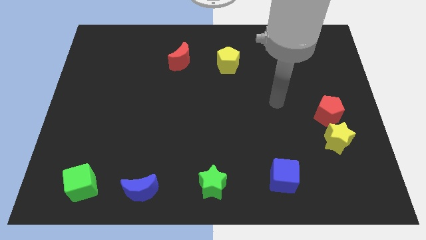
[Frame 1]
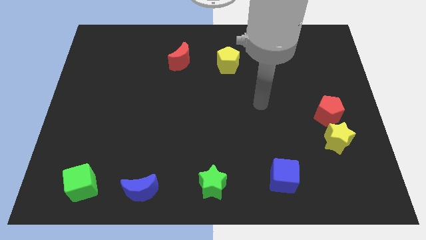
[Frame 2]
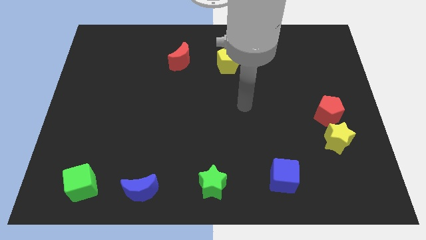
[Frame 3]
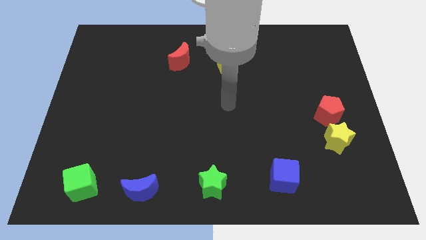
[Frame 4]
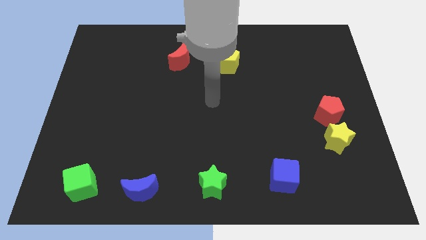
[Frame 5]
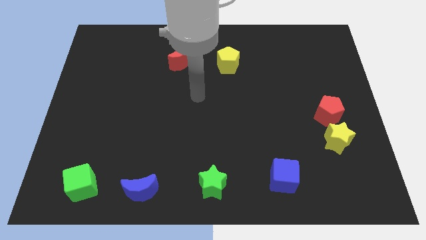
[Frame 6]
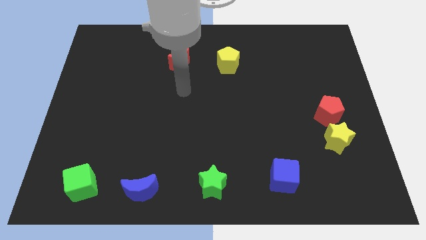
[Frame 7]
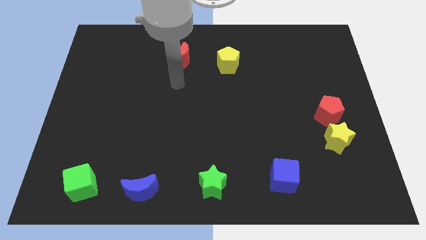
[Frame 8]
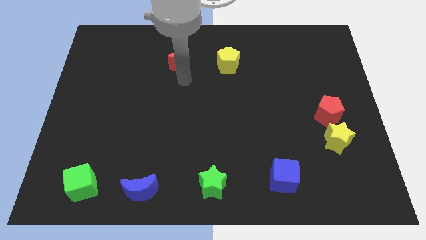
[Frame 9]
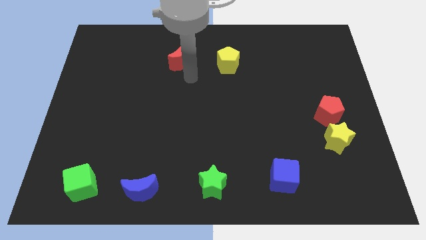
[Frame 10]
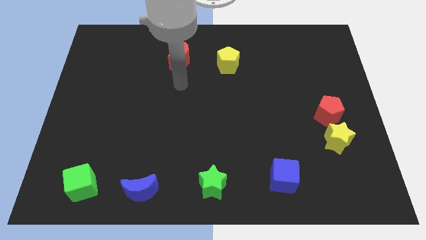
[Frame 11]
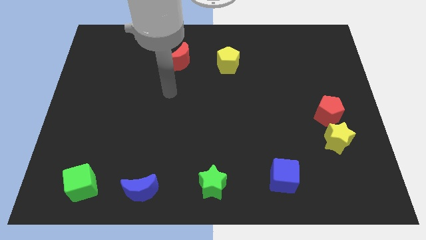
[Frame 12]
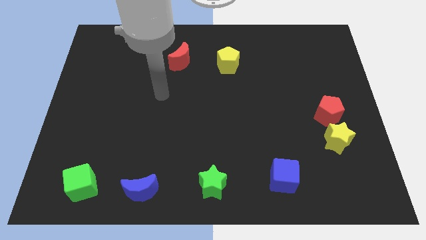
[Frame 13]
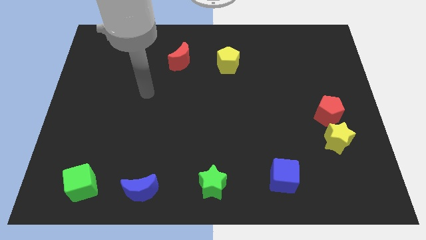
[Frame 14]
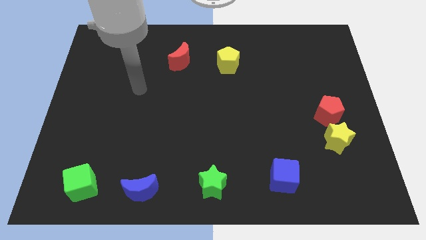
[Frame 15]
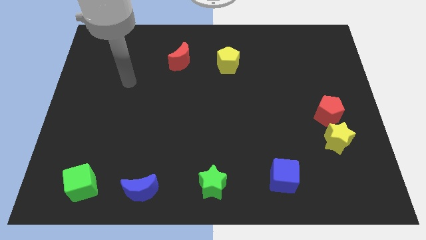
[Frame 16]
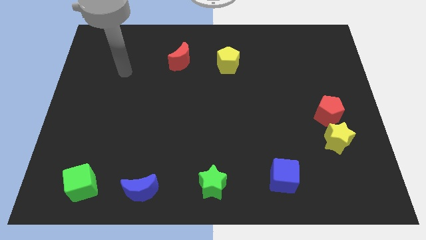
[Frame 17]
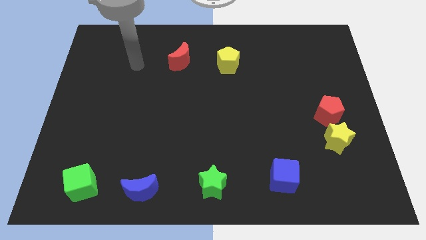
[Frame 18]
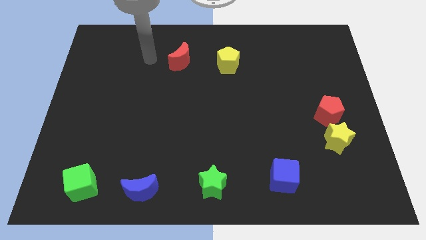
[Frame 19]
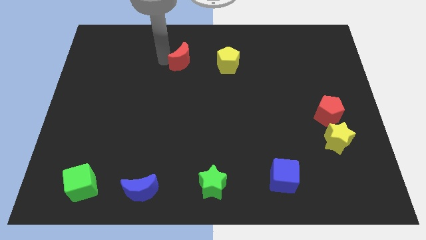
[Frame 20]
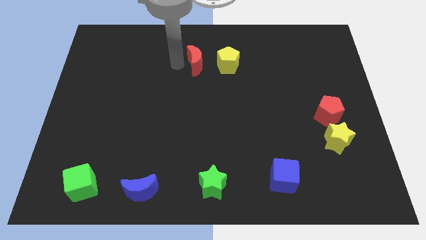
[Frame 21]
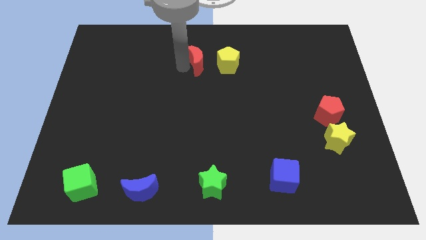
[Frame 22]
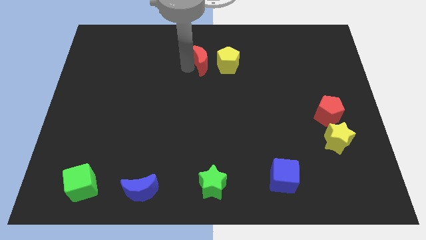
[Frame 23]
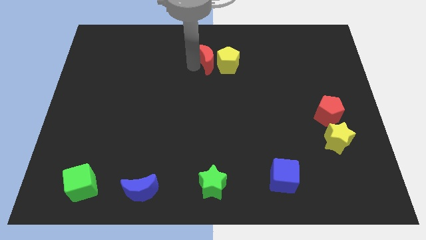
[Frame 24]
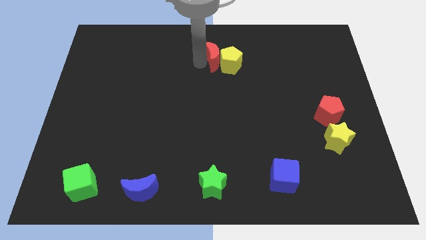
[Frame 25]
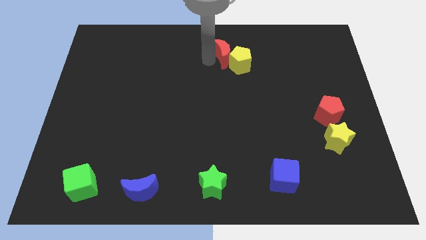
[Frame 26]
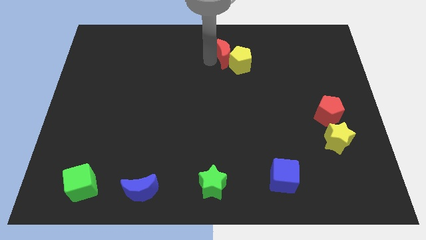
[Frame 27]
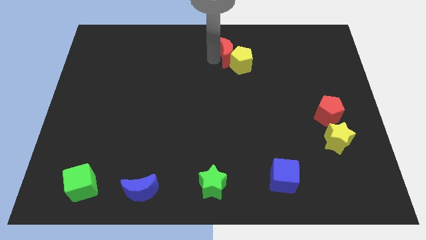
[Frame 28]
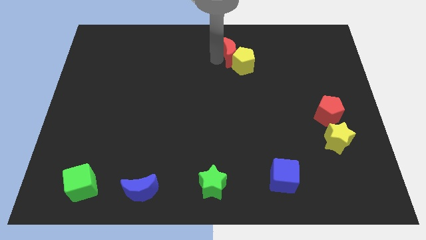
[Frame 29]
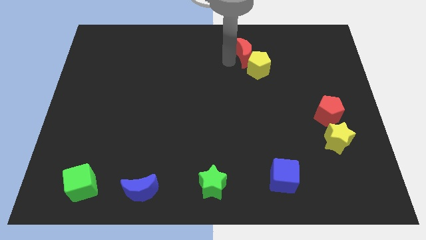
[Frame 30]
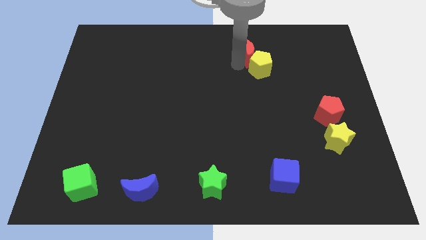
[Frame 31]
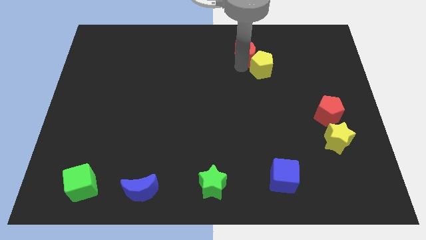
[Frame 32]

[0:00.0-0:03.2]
push the red moon into the yellow pentagon

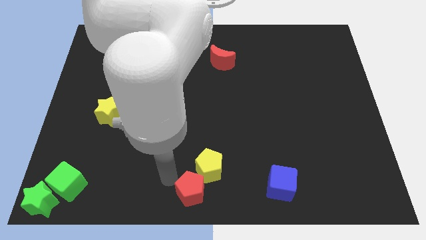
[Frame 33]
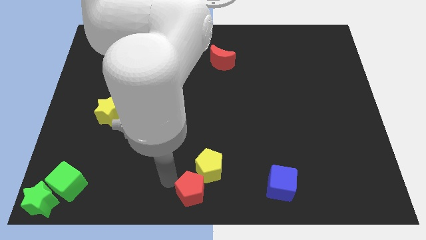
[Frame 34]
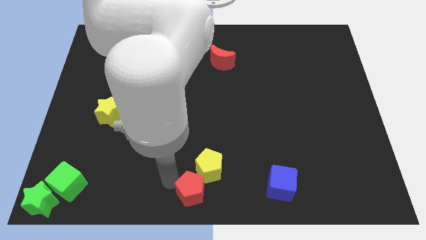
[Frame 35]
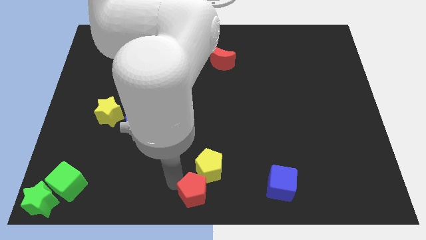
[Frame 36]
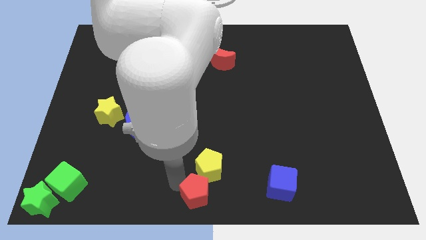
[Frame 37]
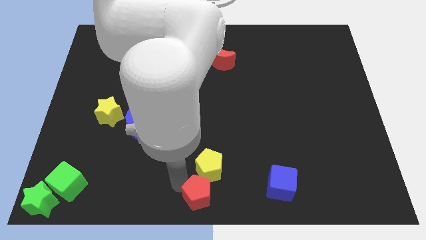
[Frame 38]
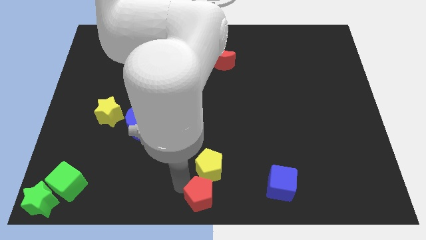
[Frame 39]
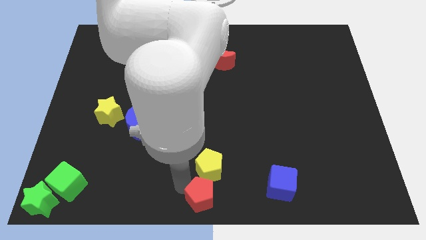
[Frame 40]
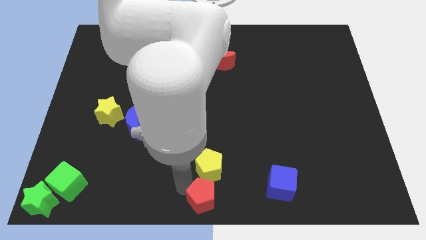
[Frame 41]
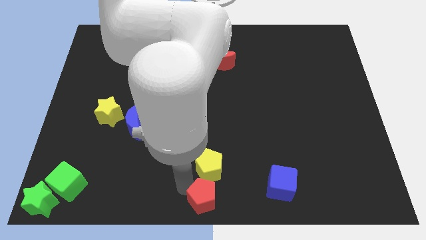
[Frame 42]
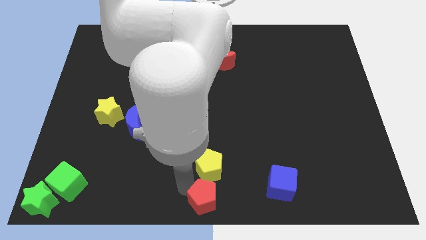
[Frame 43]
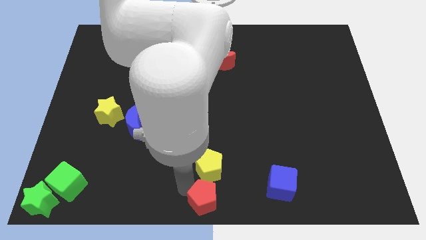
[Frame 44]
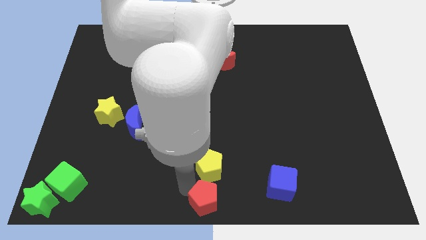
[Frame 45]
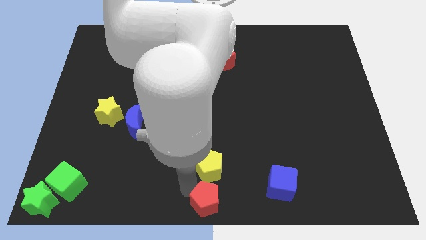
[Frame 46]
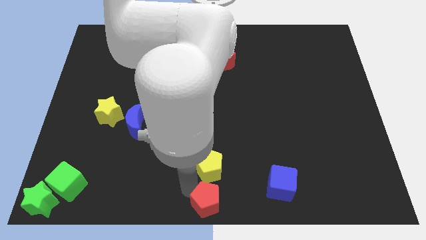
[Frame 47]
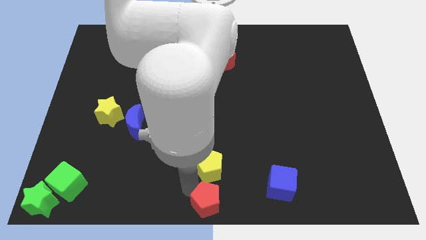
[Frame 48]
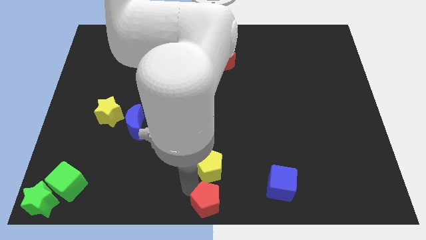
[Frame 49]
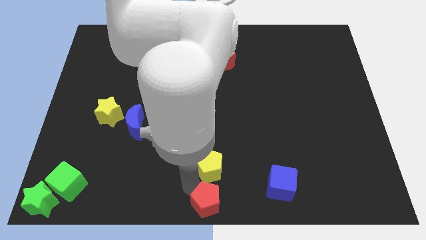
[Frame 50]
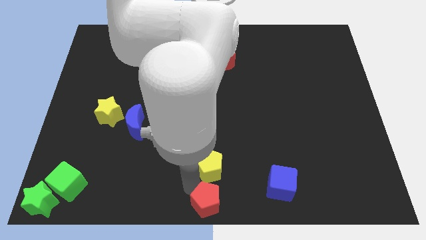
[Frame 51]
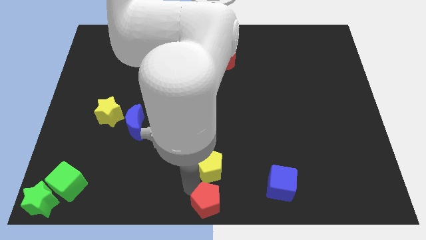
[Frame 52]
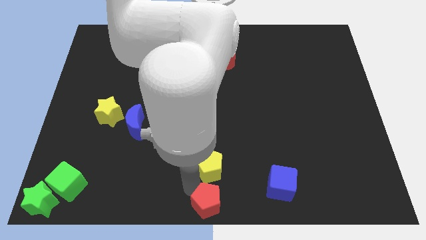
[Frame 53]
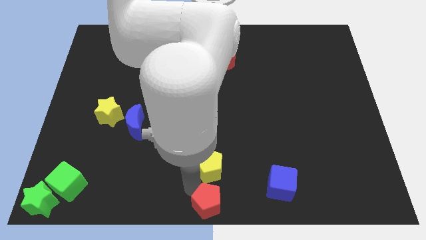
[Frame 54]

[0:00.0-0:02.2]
push the red pentagon to the bottom center of the board

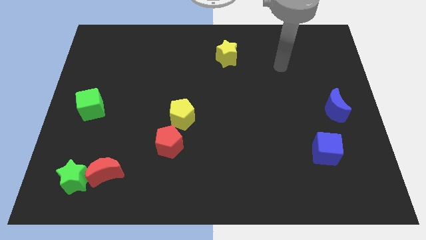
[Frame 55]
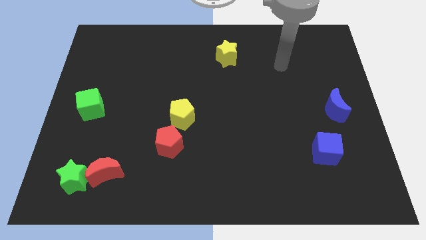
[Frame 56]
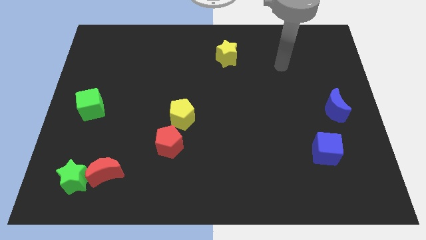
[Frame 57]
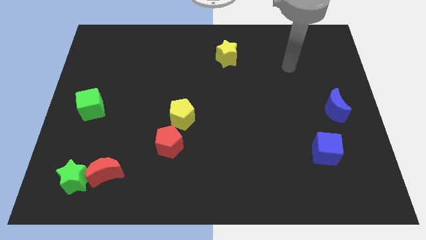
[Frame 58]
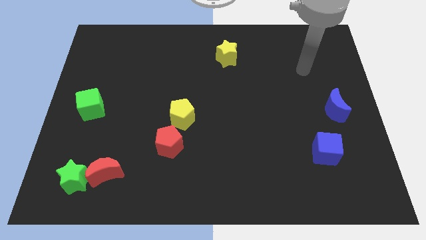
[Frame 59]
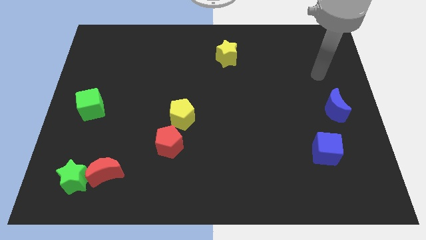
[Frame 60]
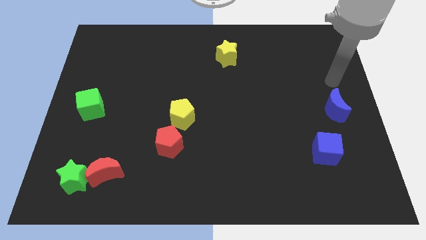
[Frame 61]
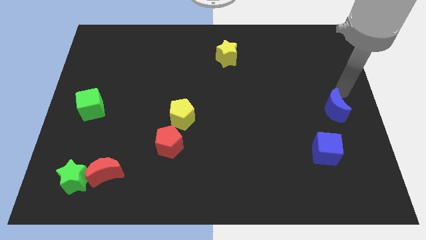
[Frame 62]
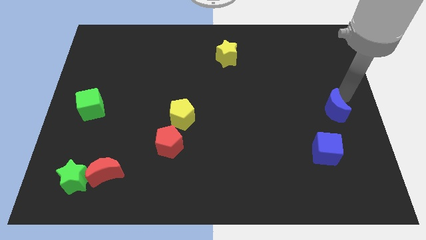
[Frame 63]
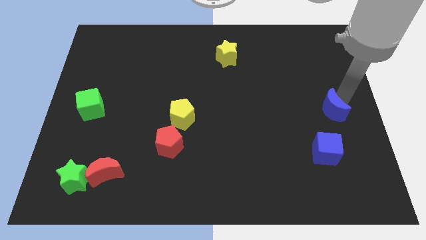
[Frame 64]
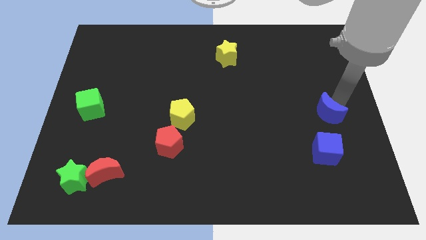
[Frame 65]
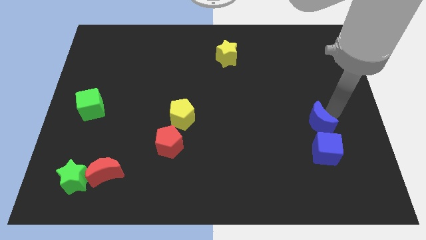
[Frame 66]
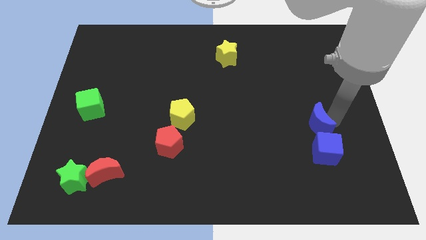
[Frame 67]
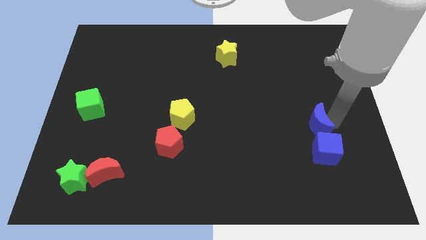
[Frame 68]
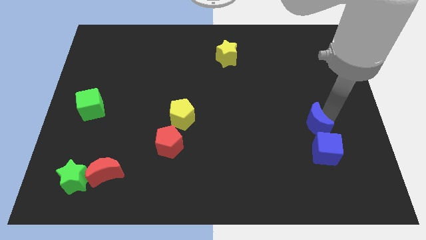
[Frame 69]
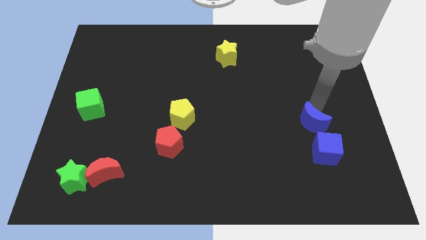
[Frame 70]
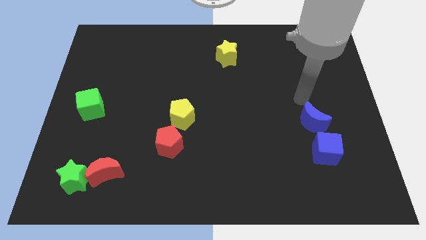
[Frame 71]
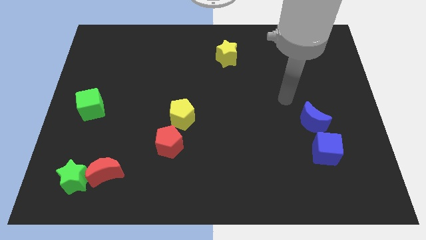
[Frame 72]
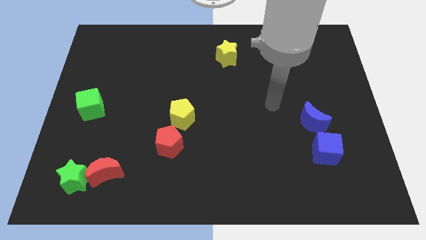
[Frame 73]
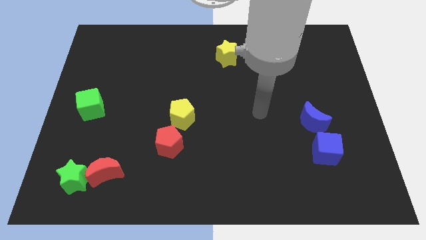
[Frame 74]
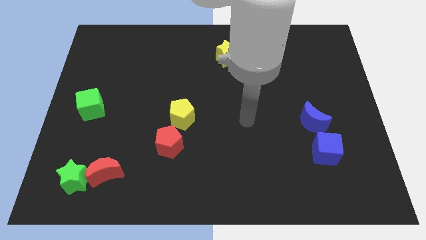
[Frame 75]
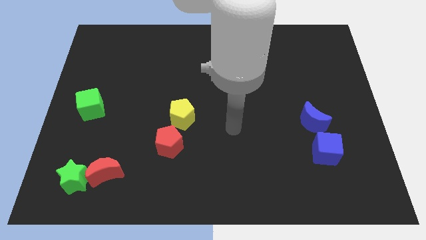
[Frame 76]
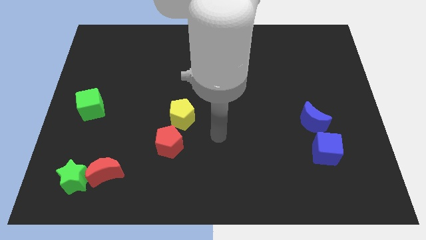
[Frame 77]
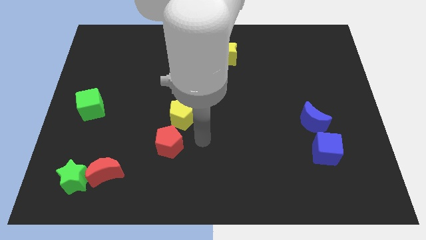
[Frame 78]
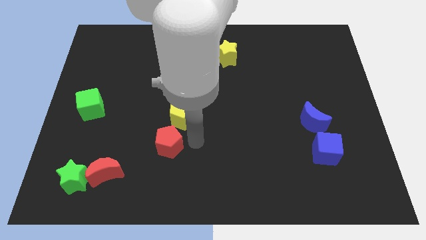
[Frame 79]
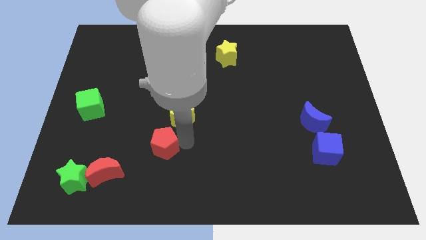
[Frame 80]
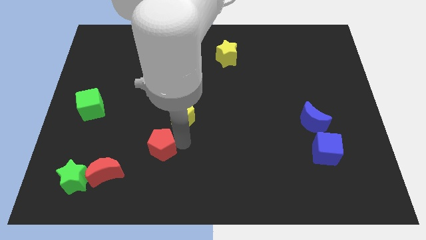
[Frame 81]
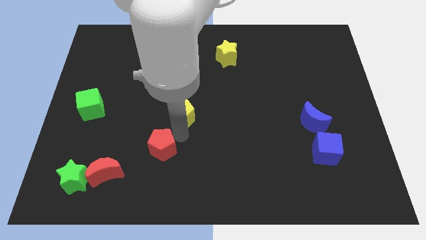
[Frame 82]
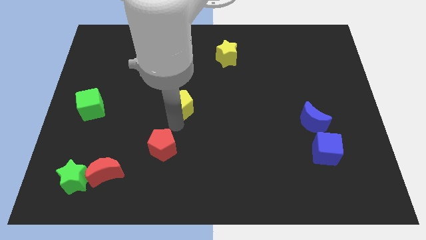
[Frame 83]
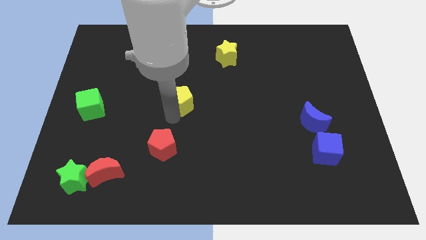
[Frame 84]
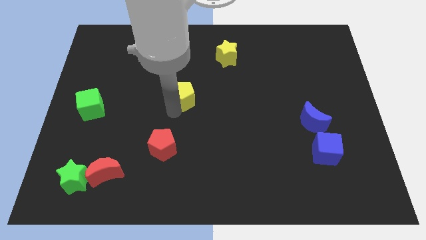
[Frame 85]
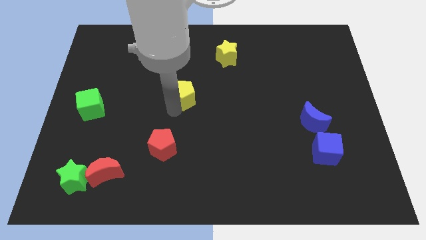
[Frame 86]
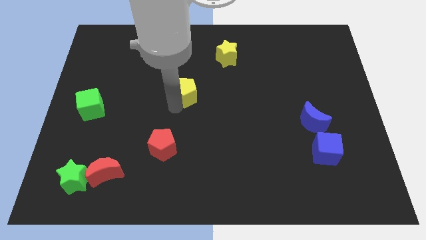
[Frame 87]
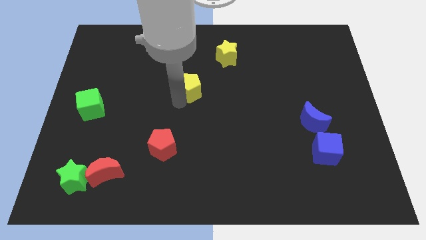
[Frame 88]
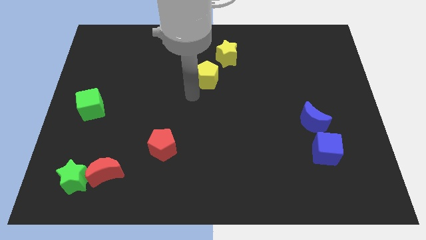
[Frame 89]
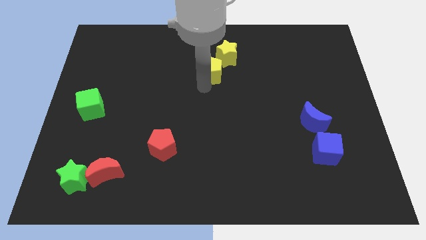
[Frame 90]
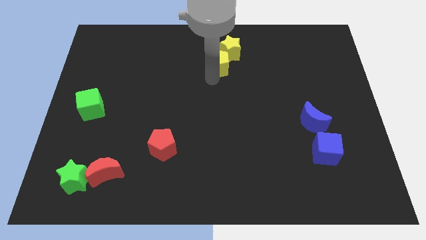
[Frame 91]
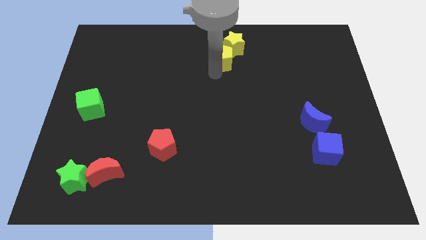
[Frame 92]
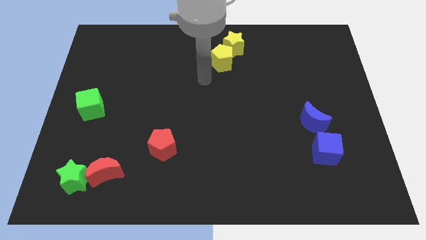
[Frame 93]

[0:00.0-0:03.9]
move the yellow pentagon into the yellow star
